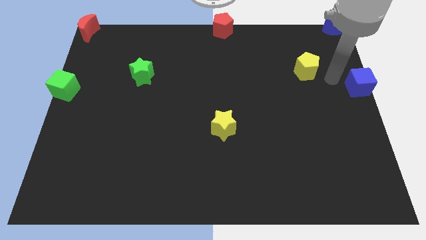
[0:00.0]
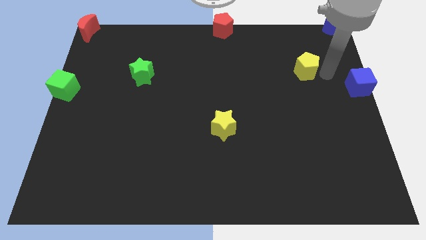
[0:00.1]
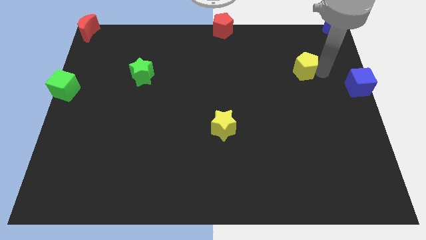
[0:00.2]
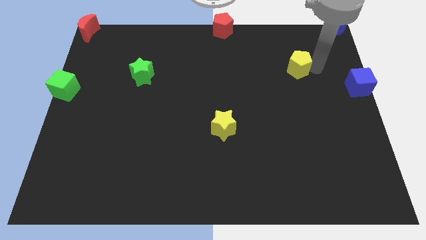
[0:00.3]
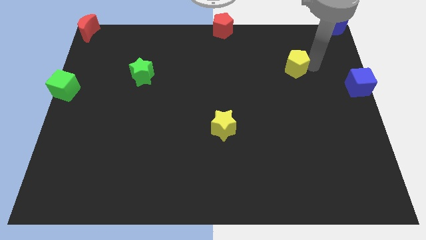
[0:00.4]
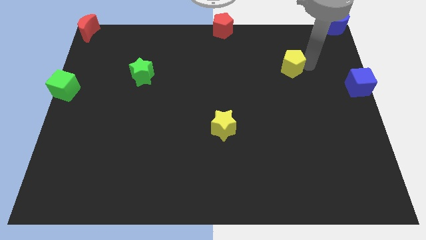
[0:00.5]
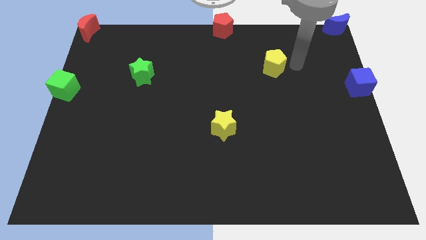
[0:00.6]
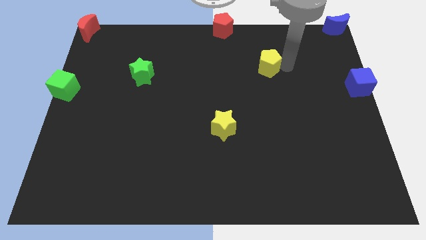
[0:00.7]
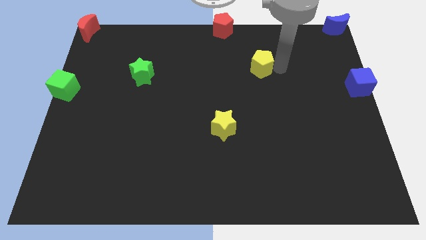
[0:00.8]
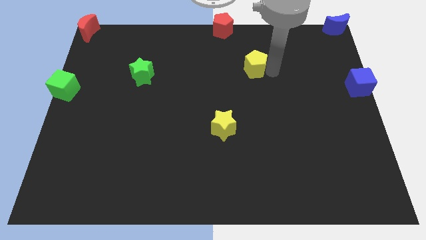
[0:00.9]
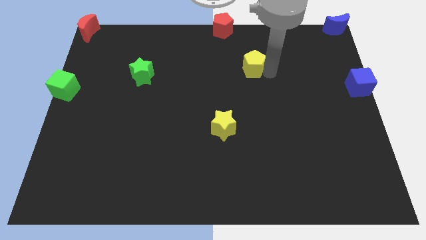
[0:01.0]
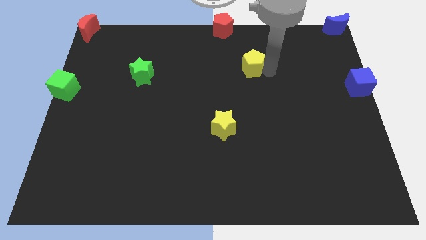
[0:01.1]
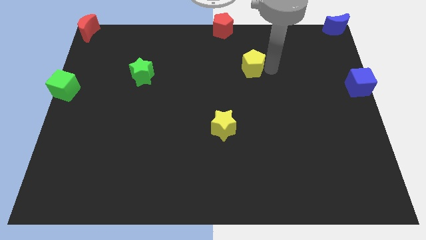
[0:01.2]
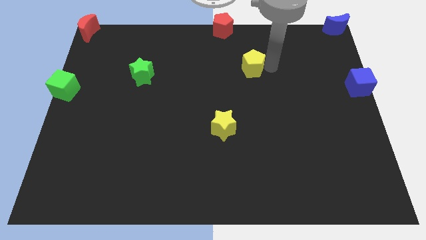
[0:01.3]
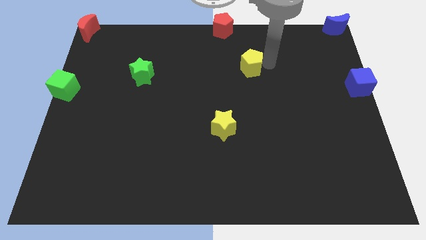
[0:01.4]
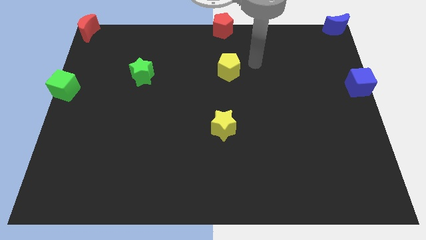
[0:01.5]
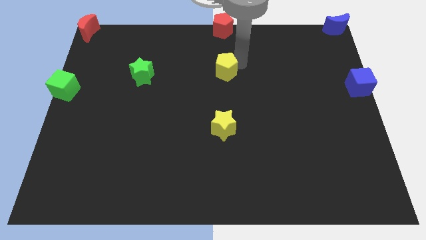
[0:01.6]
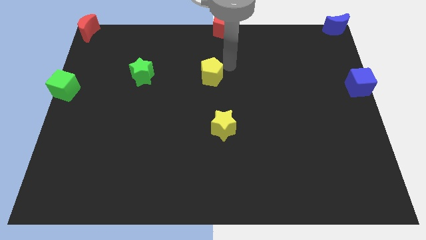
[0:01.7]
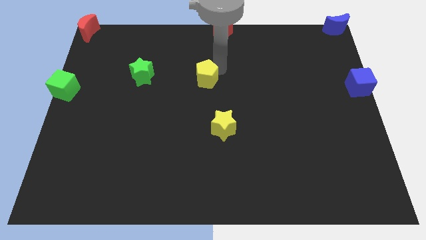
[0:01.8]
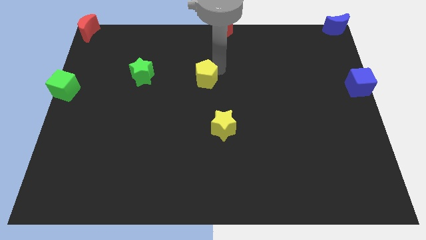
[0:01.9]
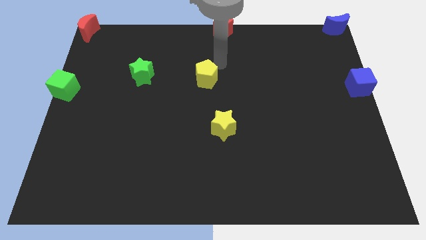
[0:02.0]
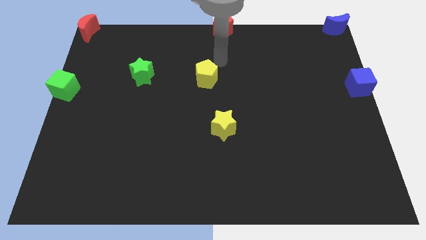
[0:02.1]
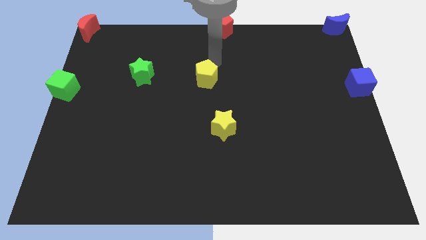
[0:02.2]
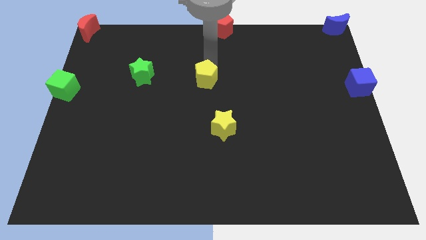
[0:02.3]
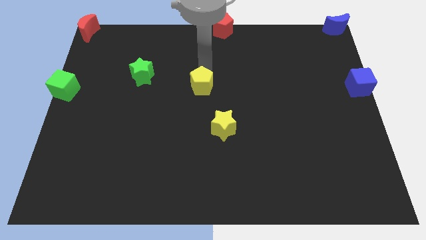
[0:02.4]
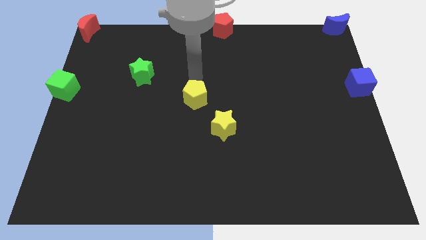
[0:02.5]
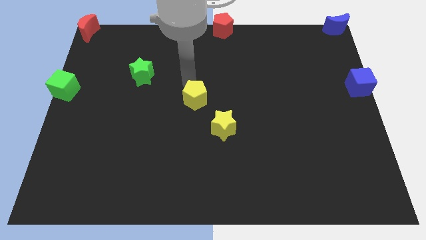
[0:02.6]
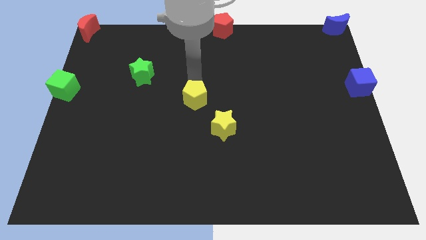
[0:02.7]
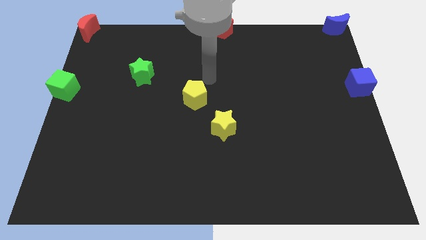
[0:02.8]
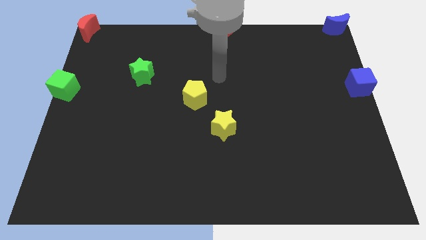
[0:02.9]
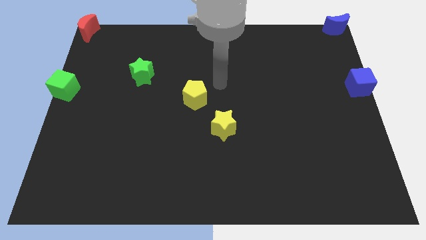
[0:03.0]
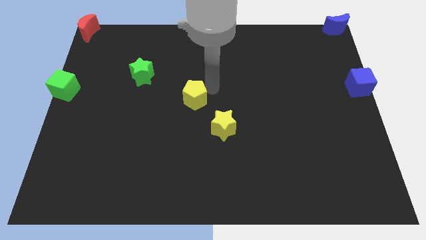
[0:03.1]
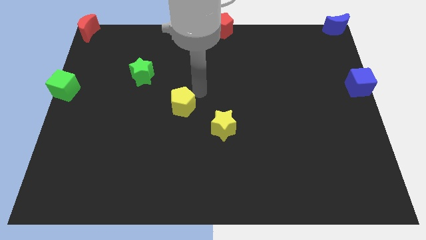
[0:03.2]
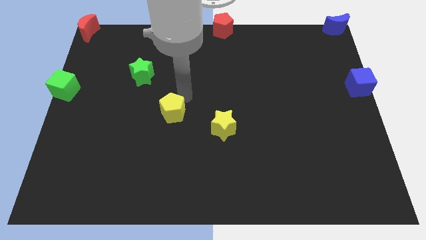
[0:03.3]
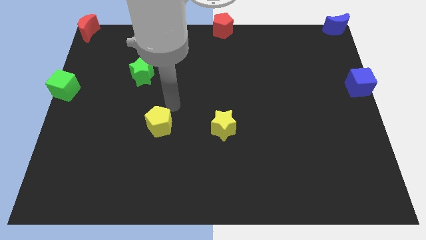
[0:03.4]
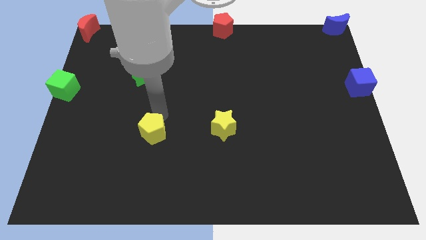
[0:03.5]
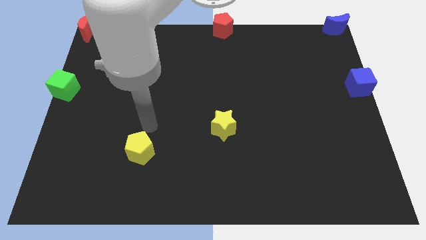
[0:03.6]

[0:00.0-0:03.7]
push the yellow pentagon towards left side of the yellow star

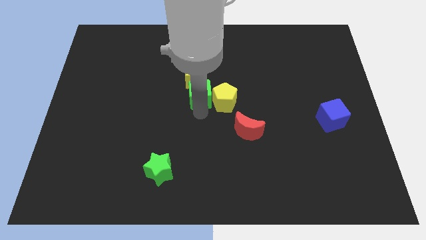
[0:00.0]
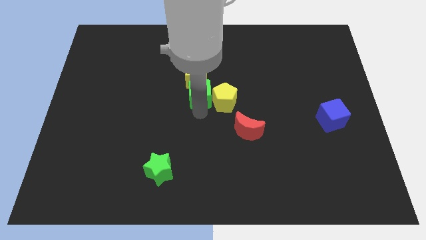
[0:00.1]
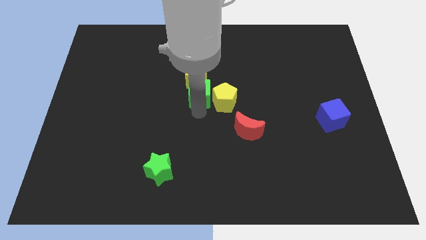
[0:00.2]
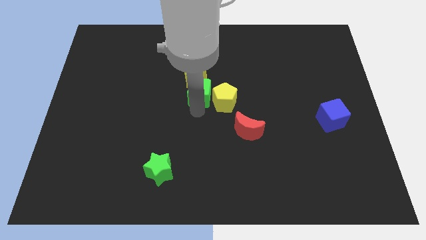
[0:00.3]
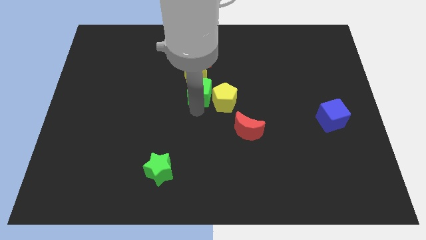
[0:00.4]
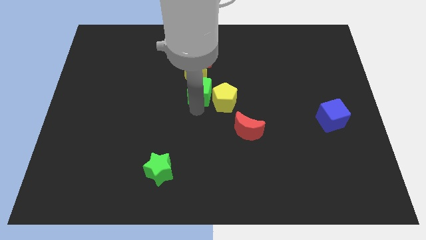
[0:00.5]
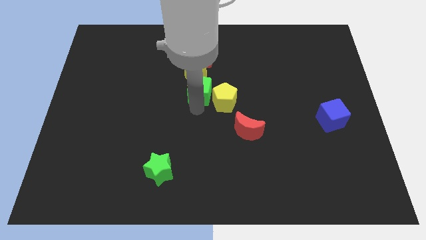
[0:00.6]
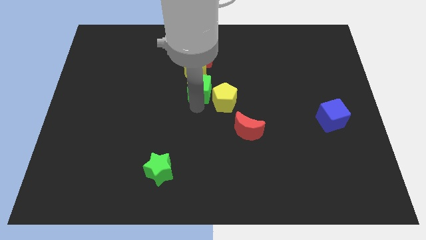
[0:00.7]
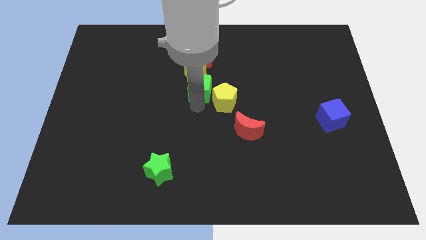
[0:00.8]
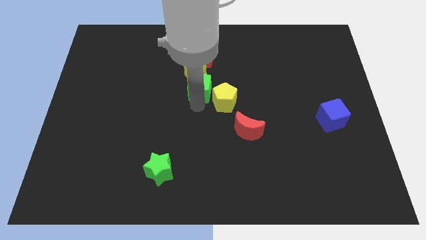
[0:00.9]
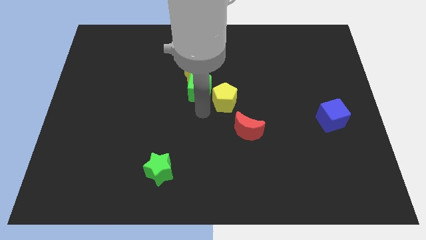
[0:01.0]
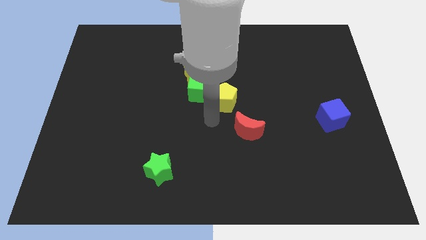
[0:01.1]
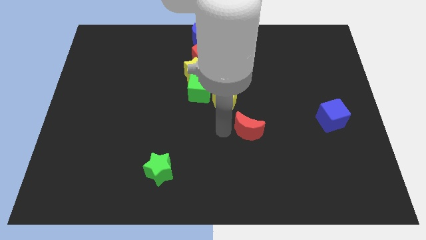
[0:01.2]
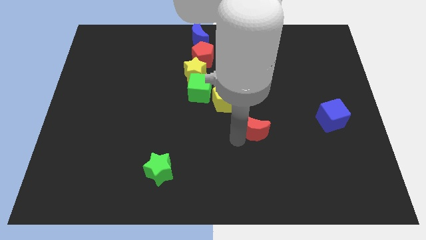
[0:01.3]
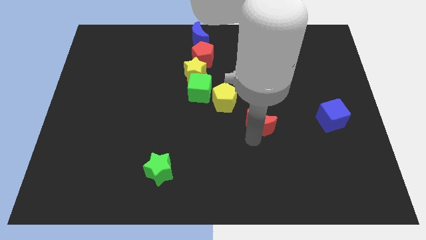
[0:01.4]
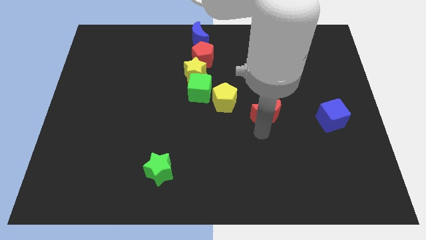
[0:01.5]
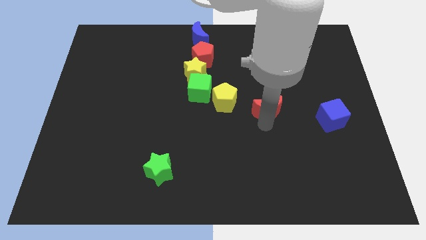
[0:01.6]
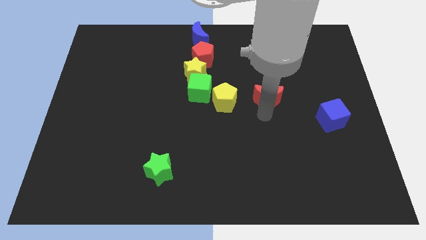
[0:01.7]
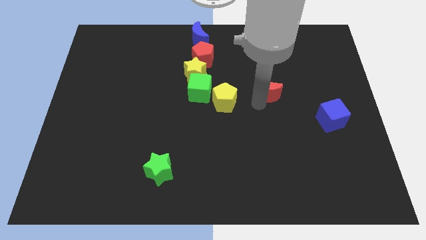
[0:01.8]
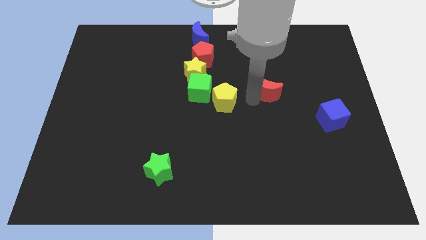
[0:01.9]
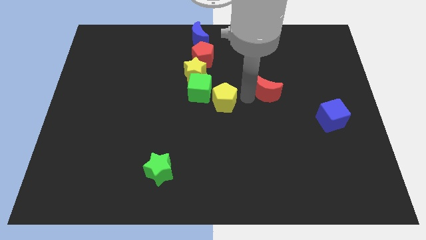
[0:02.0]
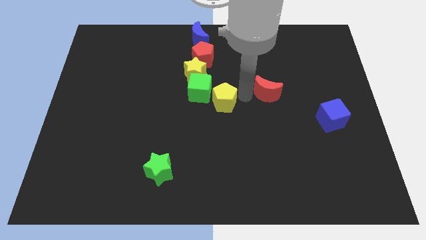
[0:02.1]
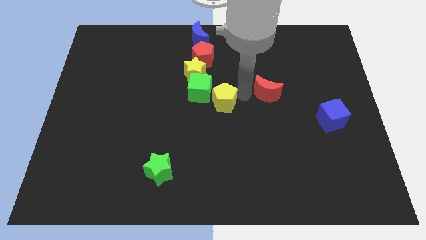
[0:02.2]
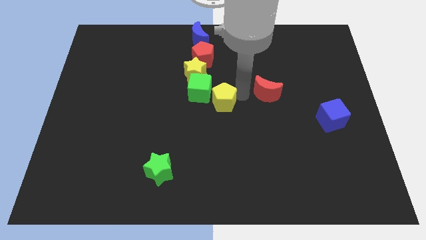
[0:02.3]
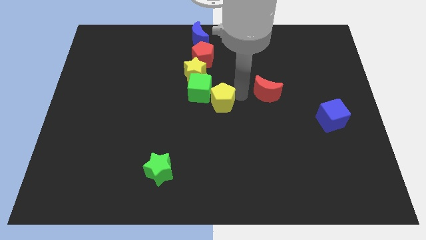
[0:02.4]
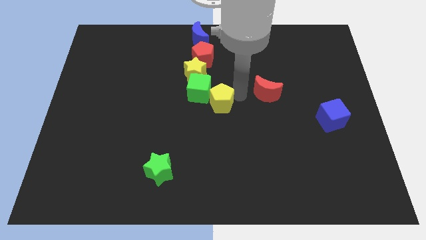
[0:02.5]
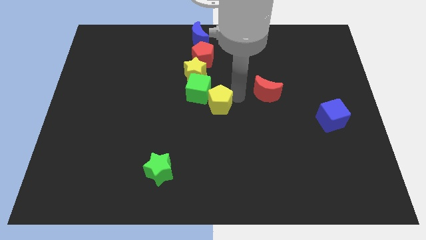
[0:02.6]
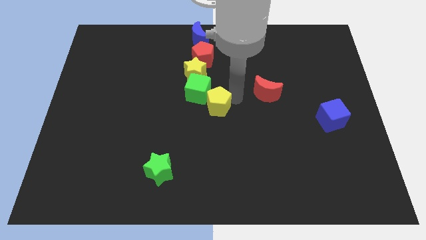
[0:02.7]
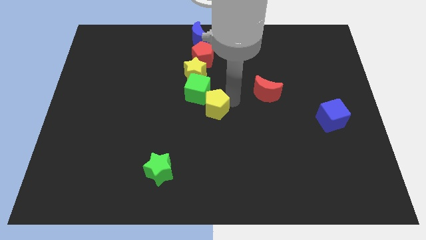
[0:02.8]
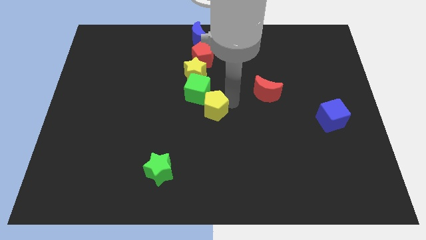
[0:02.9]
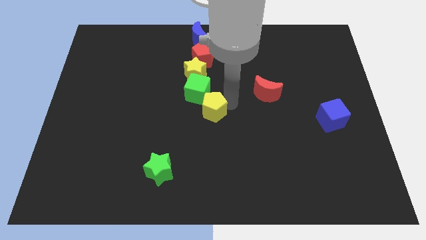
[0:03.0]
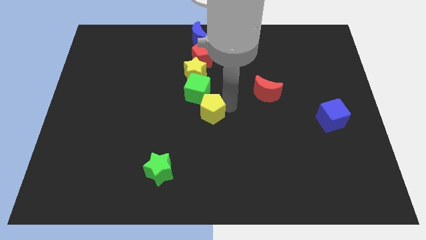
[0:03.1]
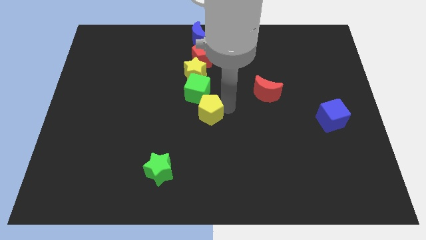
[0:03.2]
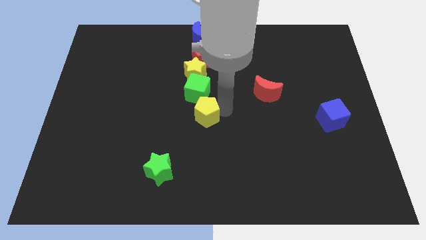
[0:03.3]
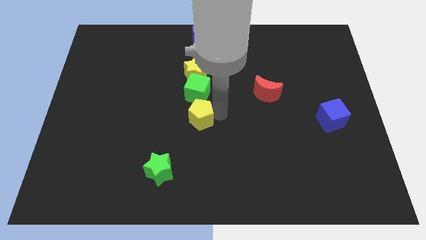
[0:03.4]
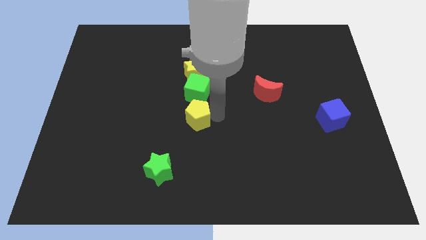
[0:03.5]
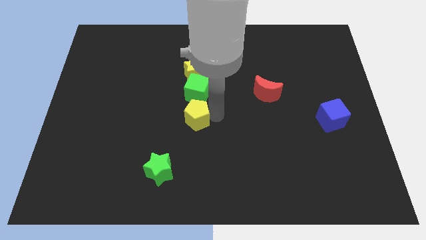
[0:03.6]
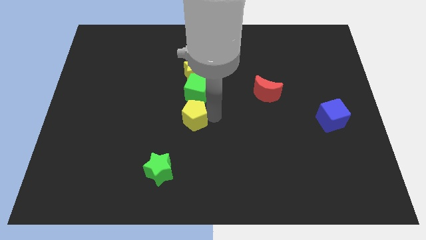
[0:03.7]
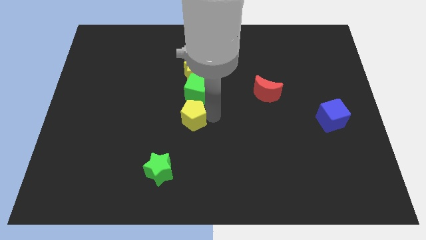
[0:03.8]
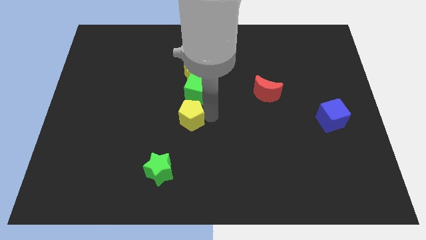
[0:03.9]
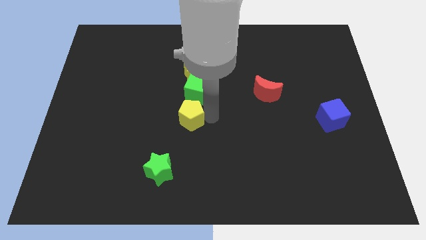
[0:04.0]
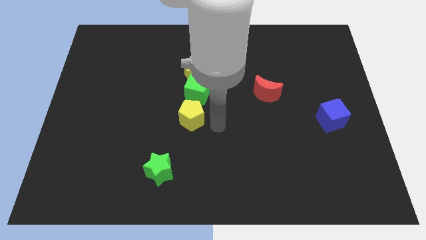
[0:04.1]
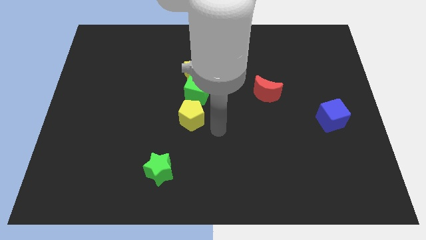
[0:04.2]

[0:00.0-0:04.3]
move the yellow pentagon below the green cube

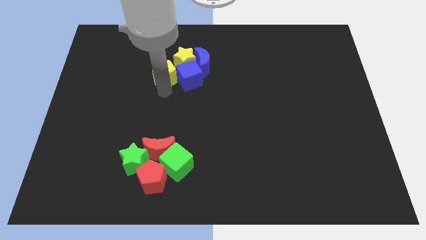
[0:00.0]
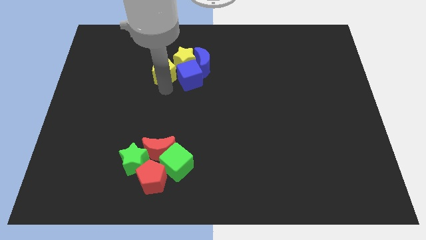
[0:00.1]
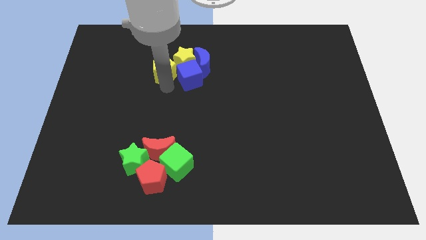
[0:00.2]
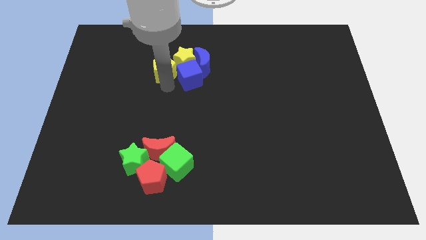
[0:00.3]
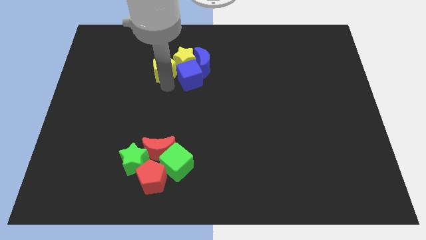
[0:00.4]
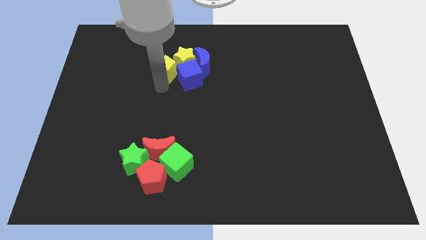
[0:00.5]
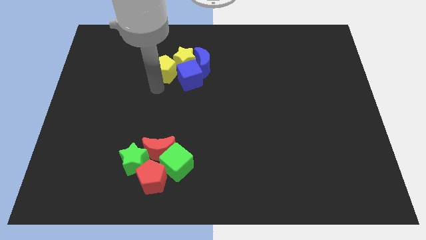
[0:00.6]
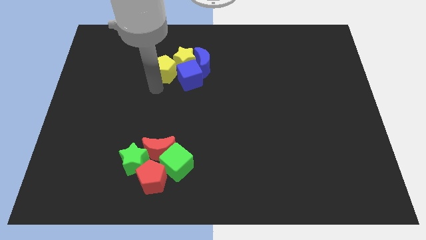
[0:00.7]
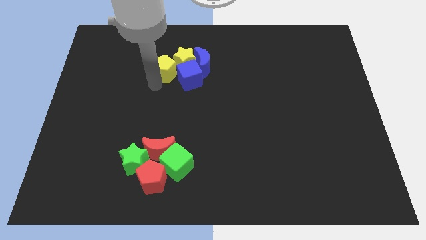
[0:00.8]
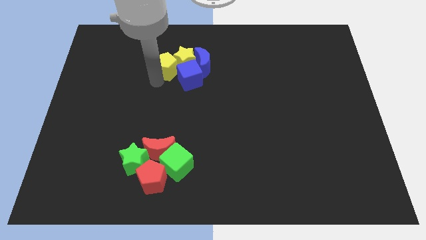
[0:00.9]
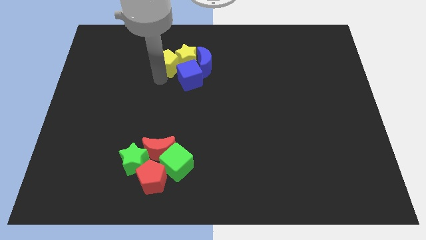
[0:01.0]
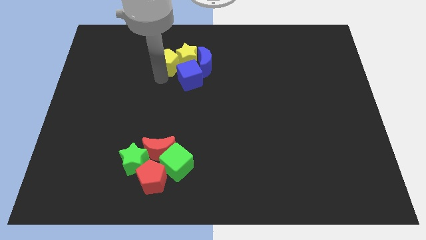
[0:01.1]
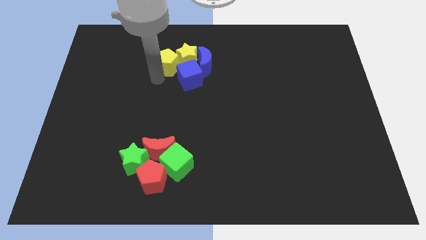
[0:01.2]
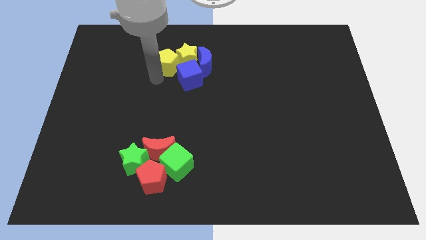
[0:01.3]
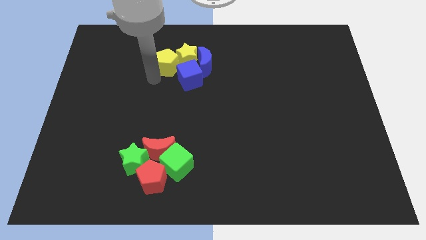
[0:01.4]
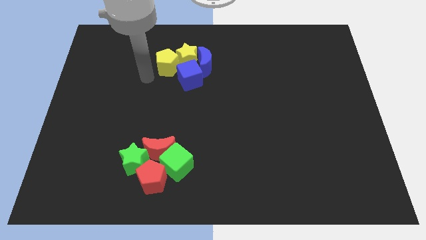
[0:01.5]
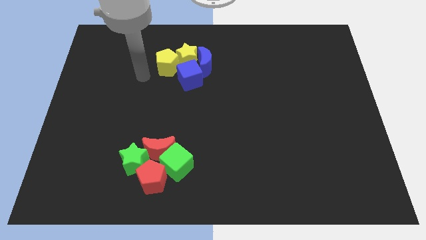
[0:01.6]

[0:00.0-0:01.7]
slide the yellow pentagon towards top side
